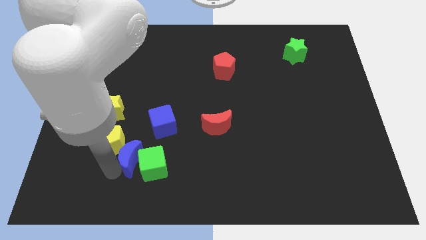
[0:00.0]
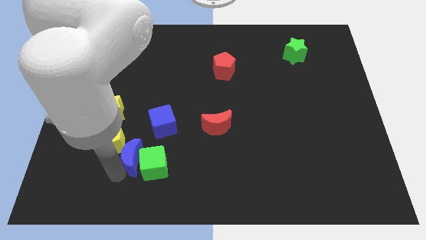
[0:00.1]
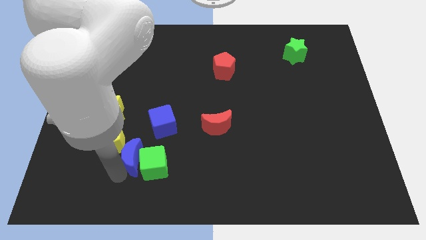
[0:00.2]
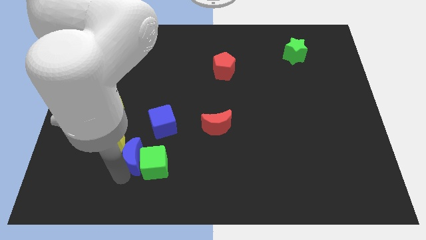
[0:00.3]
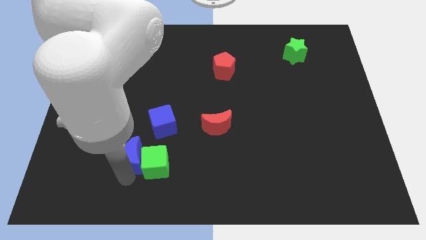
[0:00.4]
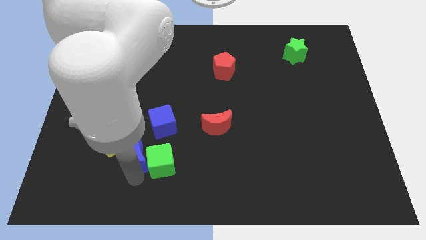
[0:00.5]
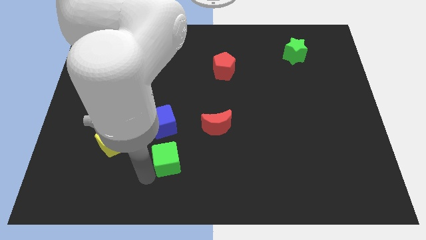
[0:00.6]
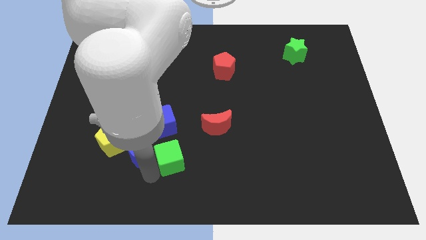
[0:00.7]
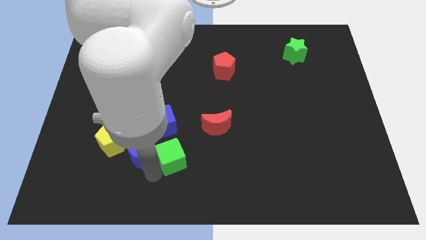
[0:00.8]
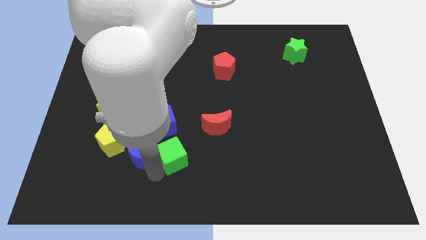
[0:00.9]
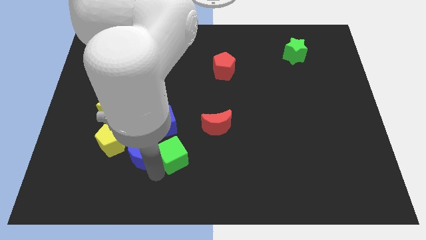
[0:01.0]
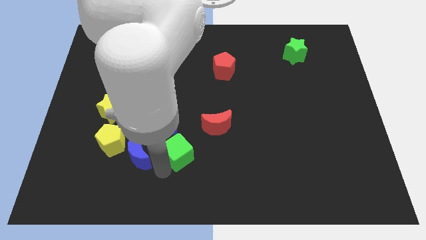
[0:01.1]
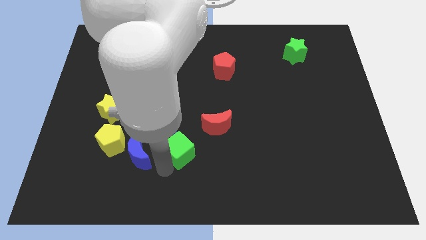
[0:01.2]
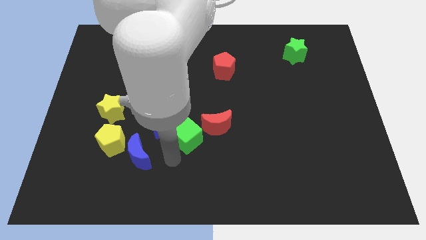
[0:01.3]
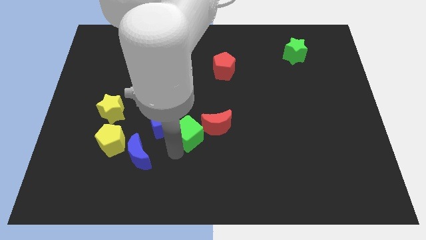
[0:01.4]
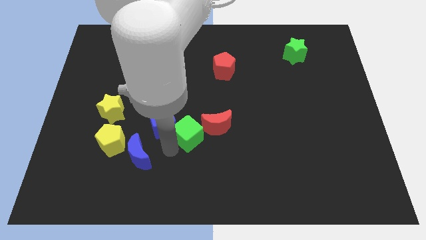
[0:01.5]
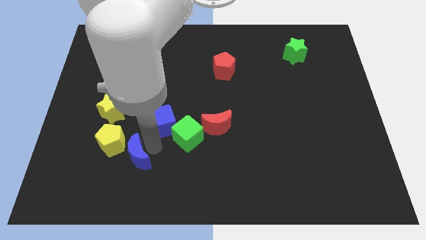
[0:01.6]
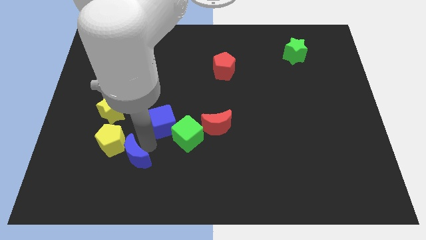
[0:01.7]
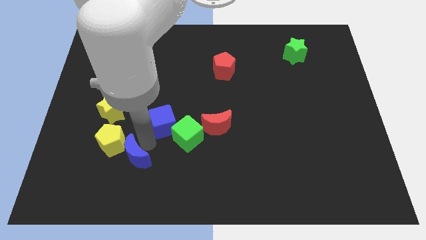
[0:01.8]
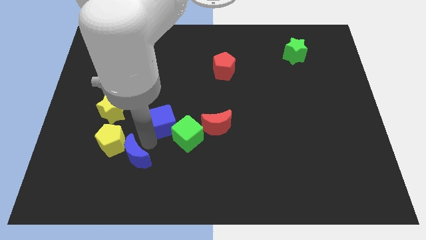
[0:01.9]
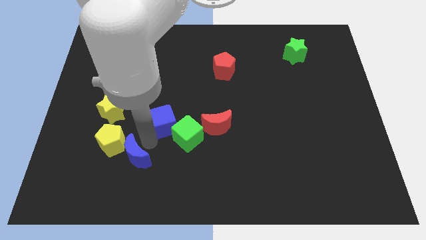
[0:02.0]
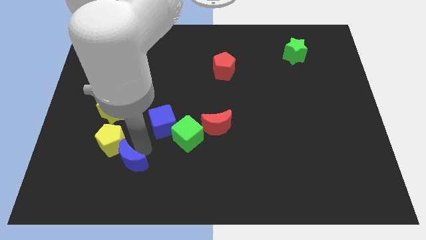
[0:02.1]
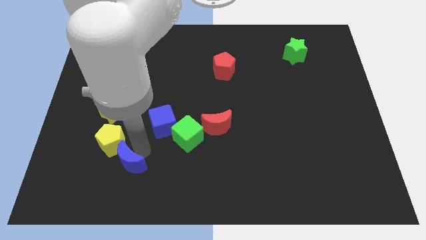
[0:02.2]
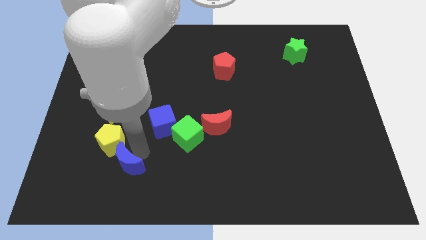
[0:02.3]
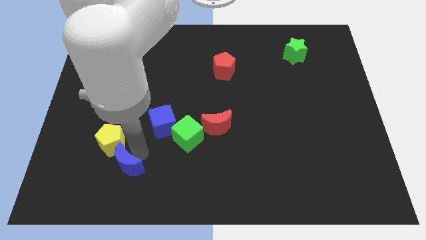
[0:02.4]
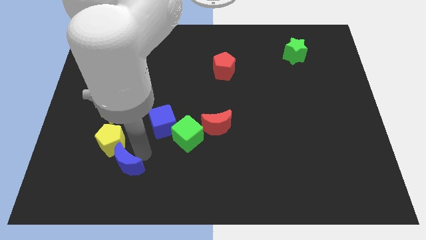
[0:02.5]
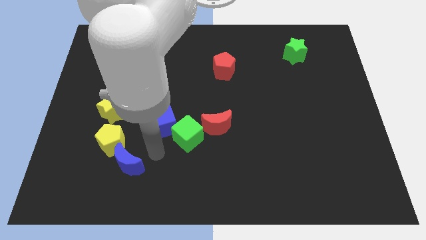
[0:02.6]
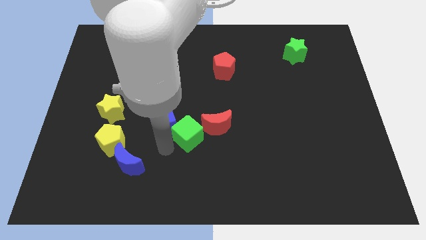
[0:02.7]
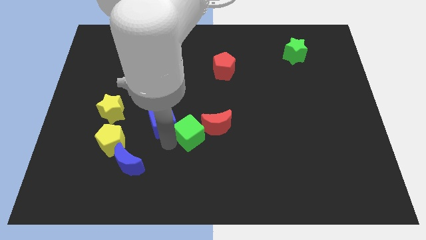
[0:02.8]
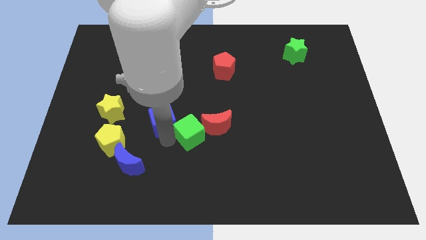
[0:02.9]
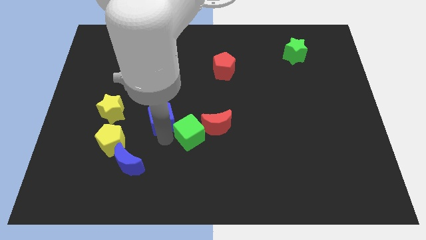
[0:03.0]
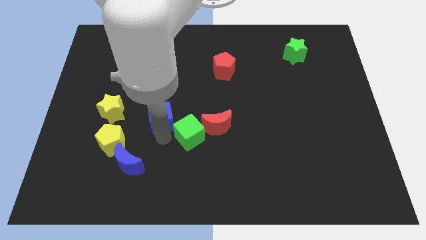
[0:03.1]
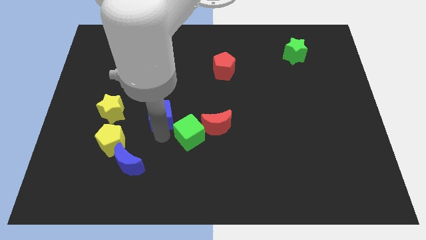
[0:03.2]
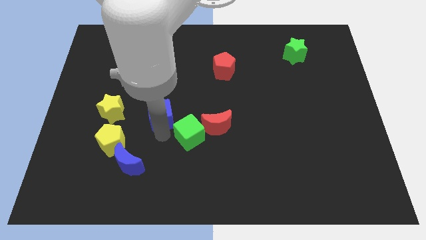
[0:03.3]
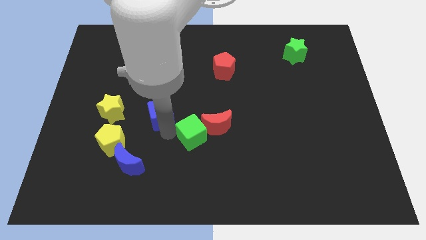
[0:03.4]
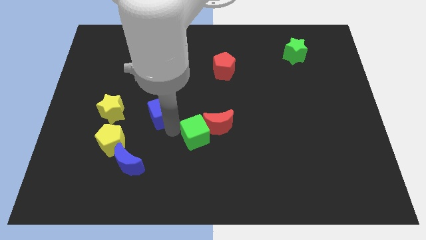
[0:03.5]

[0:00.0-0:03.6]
push slightly blue moon blue square green square to the left of red moon

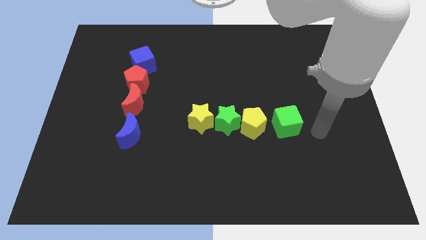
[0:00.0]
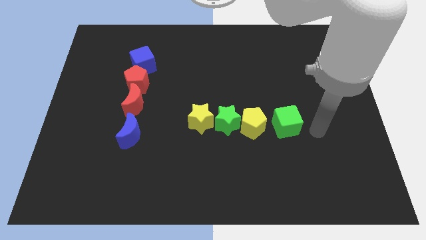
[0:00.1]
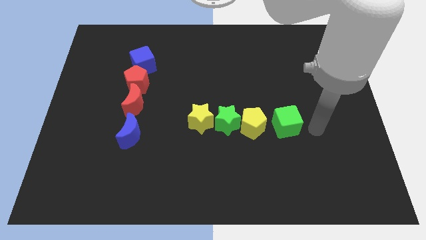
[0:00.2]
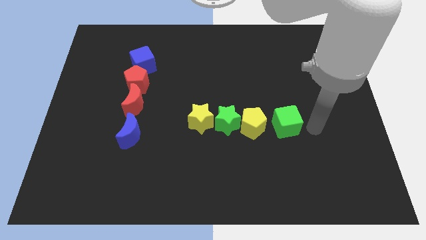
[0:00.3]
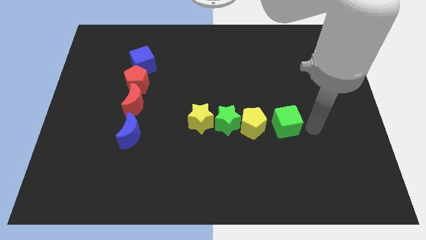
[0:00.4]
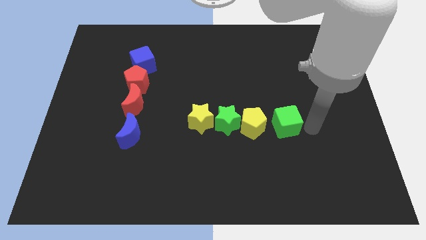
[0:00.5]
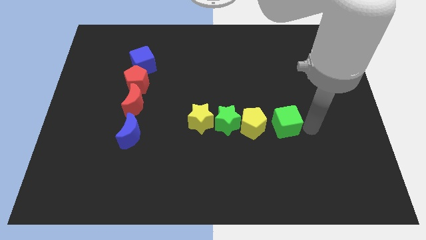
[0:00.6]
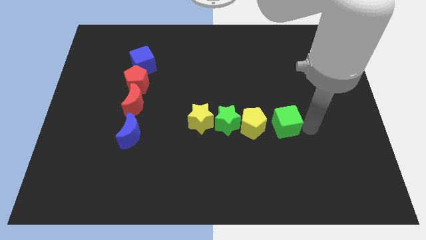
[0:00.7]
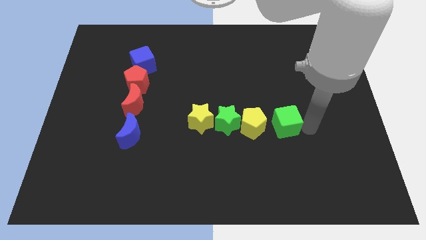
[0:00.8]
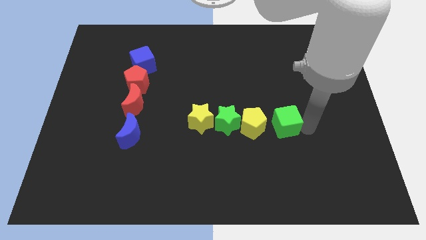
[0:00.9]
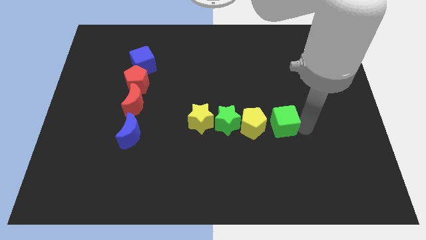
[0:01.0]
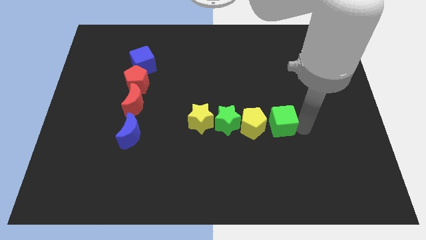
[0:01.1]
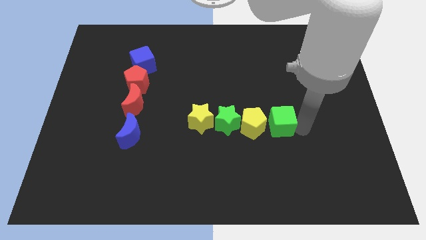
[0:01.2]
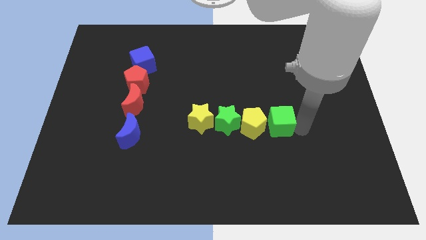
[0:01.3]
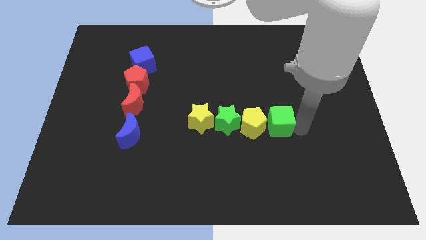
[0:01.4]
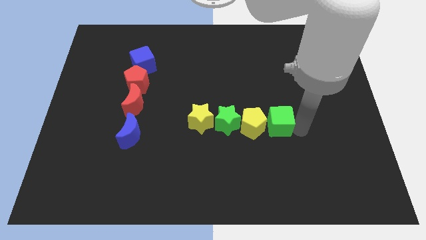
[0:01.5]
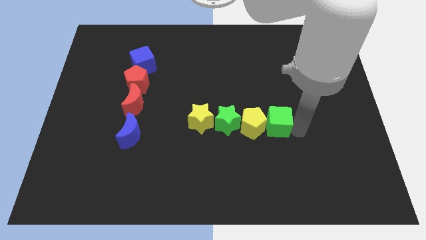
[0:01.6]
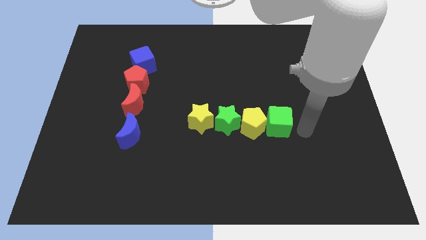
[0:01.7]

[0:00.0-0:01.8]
move the green cube into the right side of the yellow pentagon

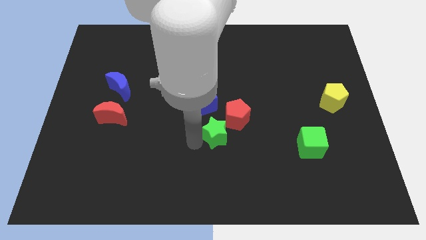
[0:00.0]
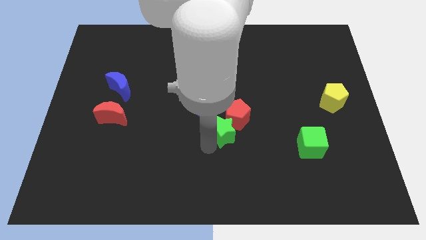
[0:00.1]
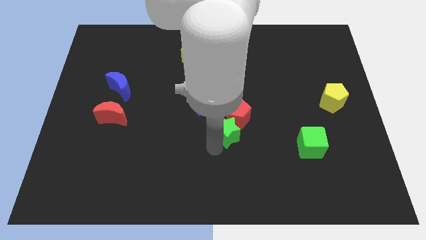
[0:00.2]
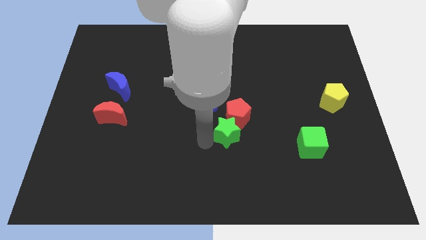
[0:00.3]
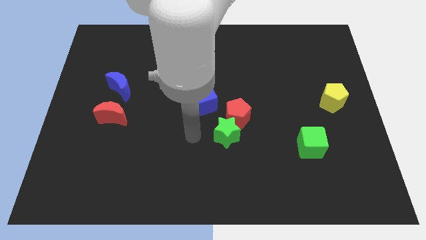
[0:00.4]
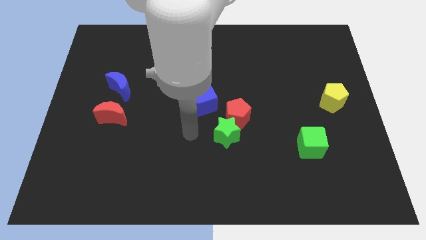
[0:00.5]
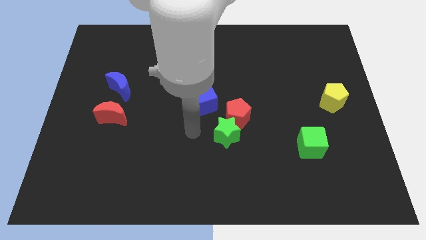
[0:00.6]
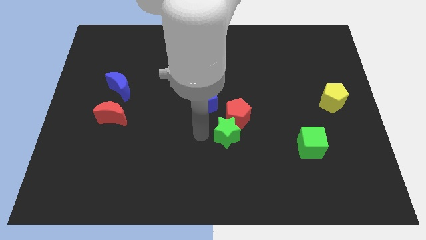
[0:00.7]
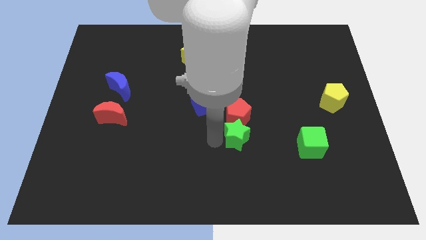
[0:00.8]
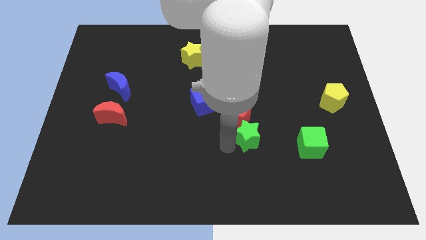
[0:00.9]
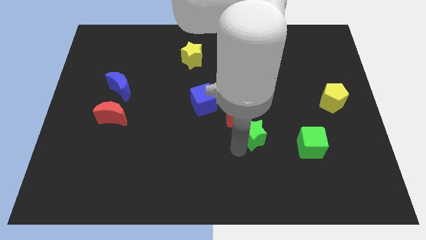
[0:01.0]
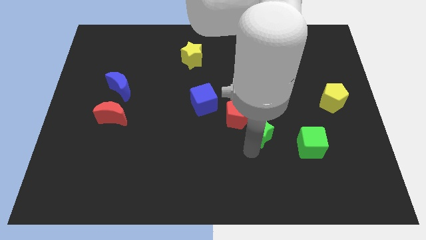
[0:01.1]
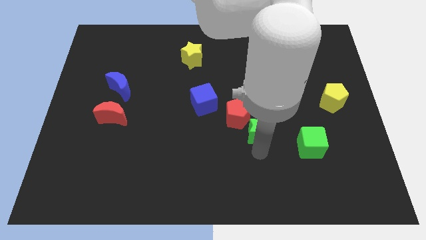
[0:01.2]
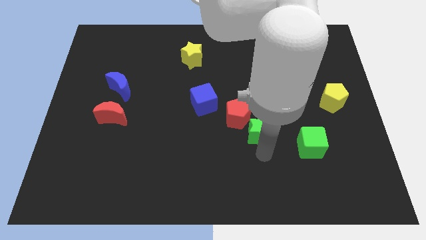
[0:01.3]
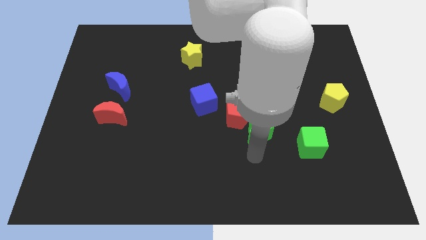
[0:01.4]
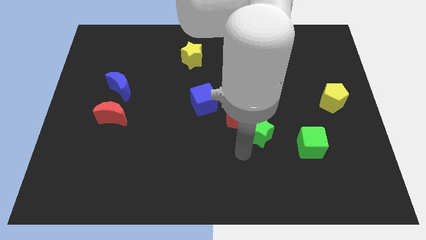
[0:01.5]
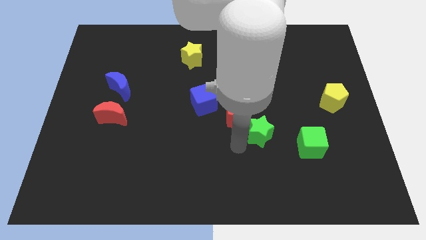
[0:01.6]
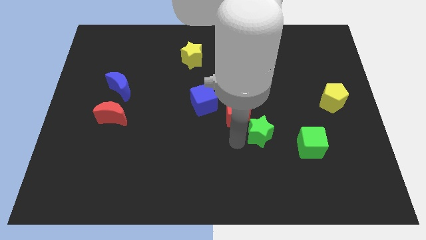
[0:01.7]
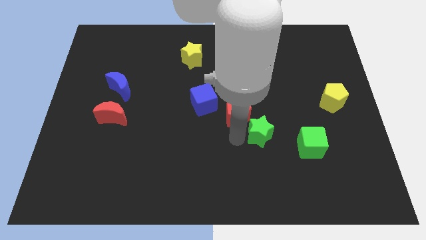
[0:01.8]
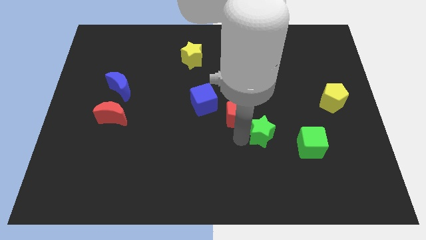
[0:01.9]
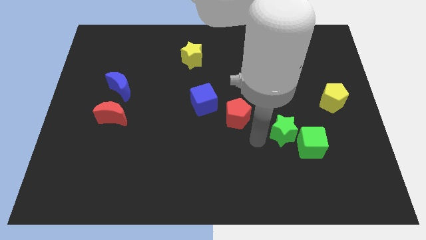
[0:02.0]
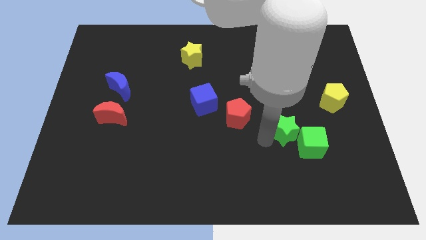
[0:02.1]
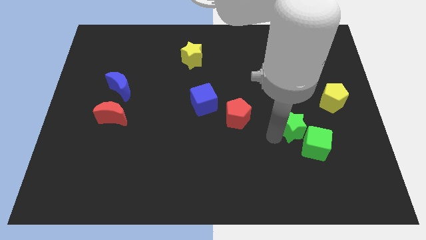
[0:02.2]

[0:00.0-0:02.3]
place the green star into green cube

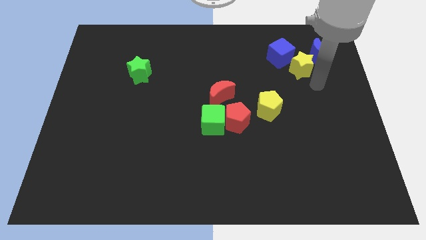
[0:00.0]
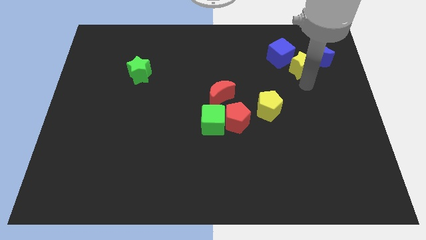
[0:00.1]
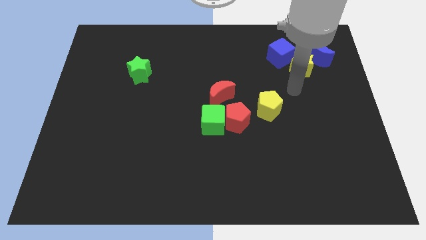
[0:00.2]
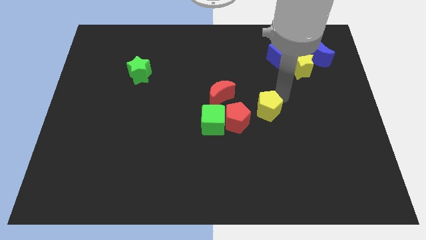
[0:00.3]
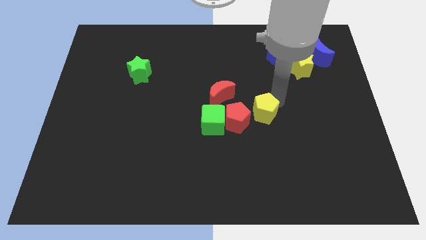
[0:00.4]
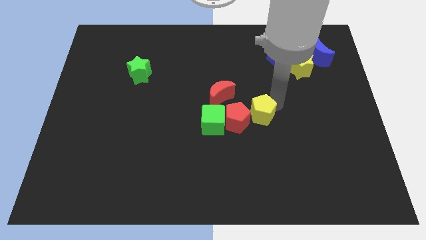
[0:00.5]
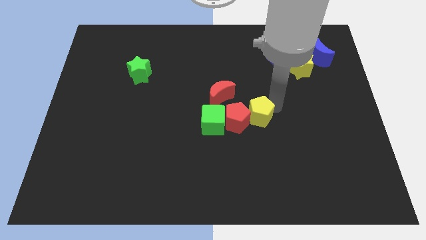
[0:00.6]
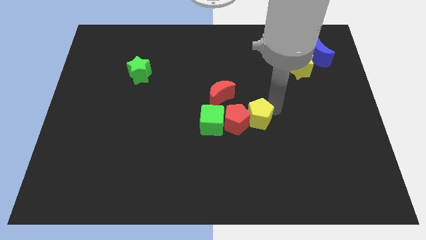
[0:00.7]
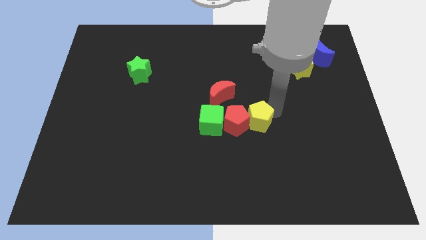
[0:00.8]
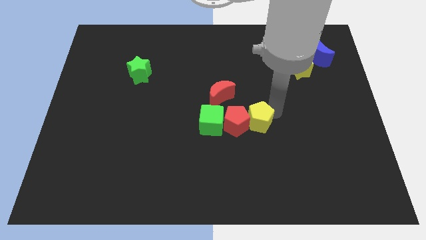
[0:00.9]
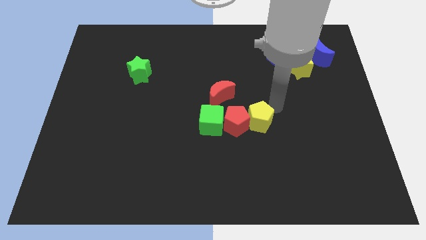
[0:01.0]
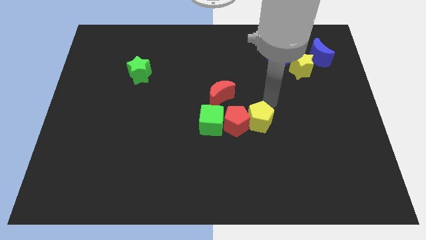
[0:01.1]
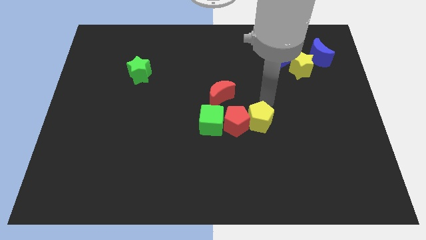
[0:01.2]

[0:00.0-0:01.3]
slightly move the yellow pentagon towards down

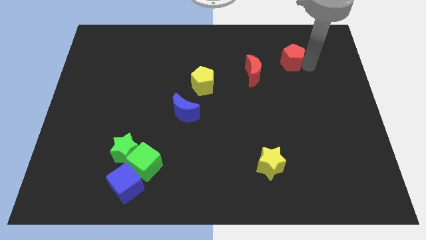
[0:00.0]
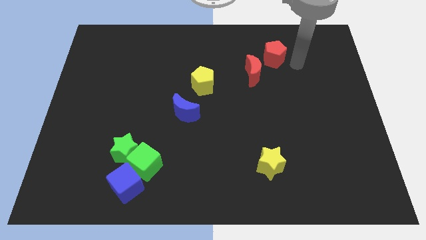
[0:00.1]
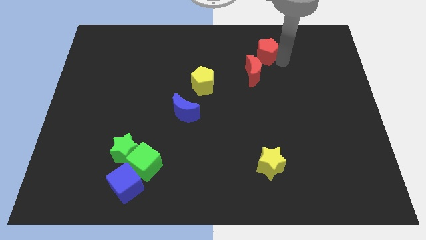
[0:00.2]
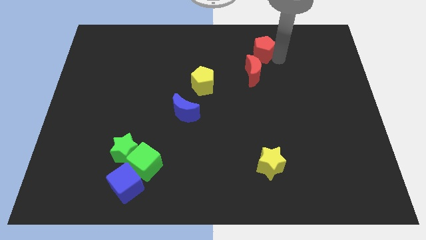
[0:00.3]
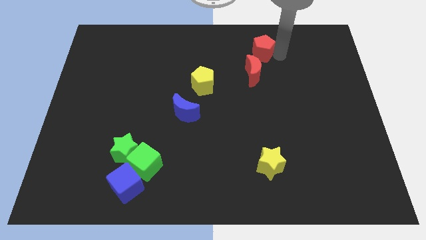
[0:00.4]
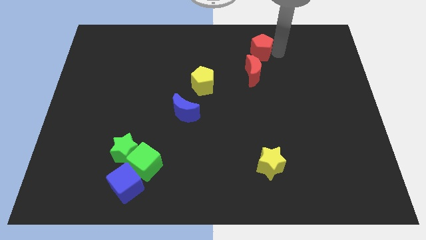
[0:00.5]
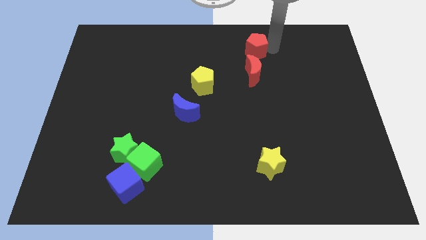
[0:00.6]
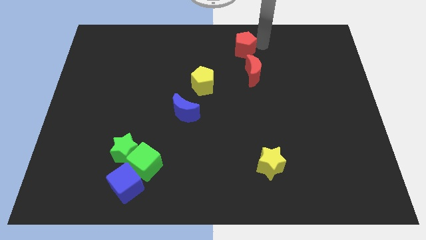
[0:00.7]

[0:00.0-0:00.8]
move the red pentagon above the red moon
